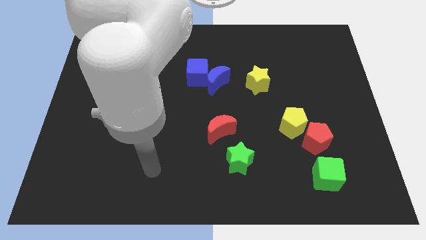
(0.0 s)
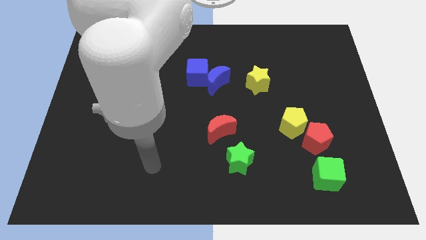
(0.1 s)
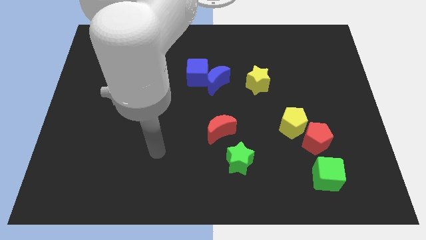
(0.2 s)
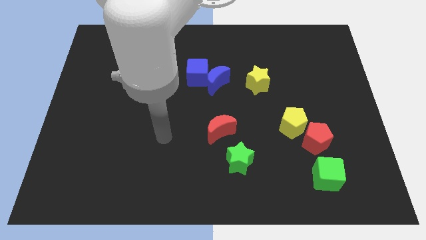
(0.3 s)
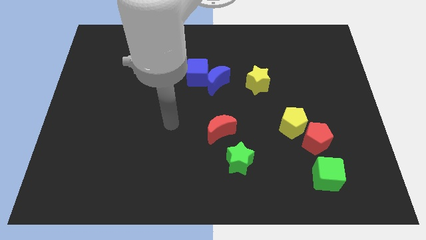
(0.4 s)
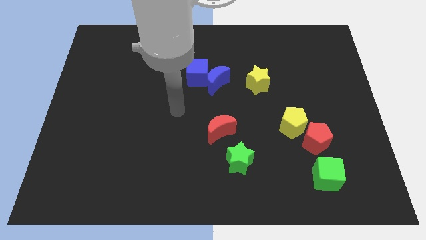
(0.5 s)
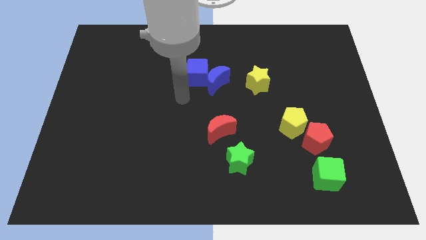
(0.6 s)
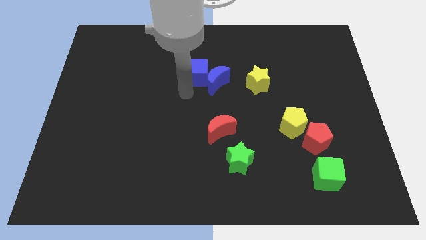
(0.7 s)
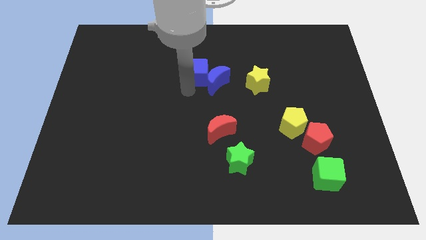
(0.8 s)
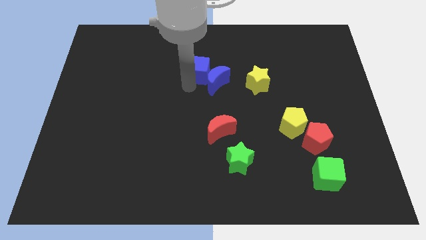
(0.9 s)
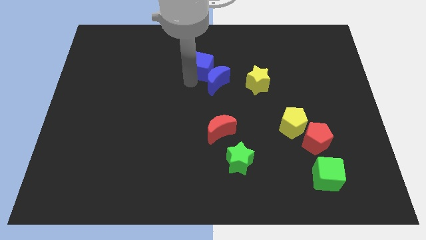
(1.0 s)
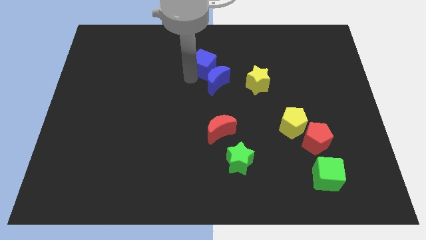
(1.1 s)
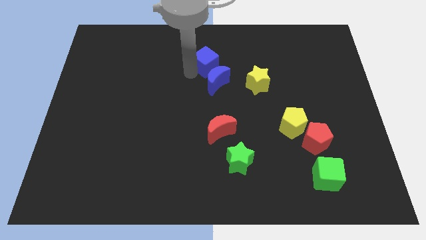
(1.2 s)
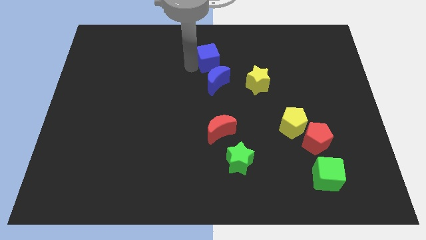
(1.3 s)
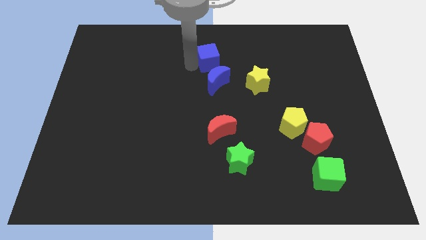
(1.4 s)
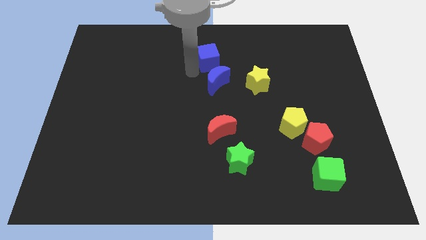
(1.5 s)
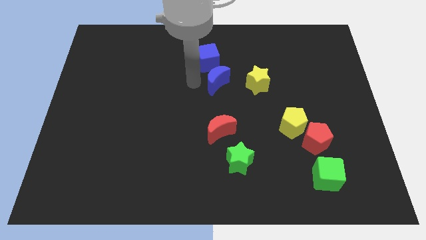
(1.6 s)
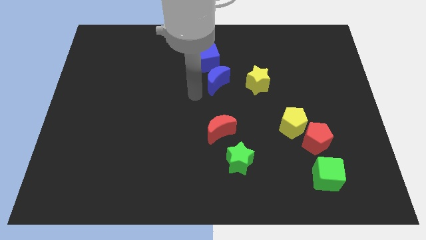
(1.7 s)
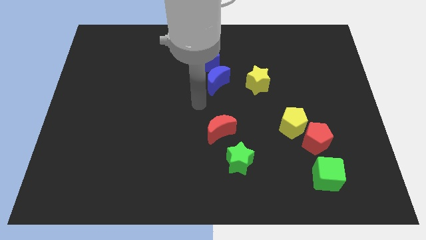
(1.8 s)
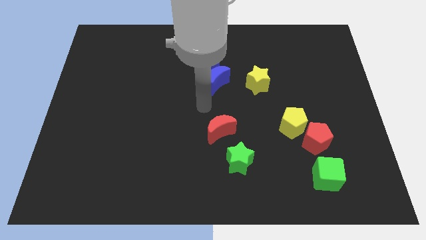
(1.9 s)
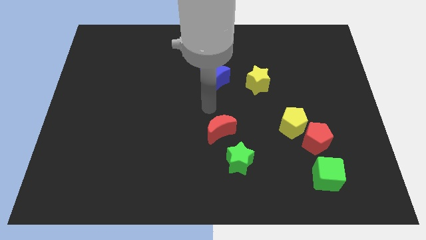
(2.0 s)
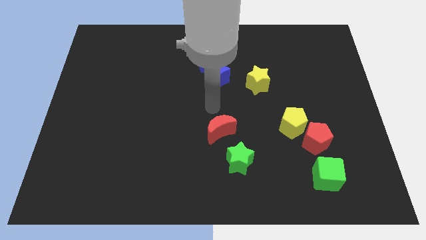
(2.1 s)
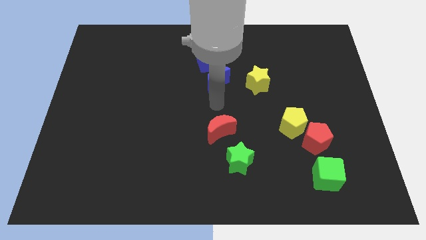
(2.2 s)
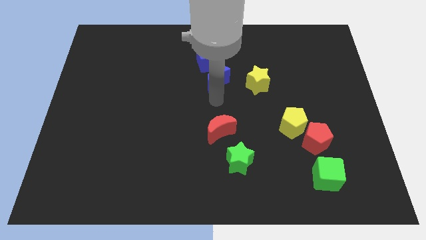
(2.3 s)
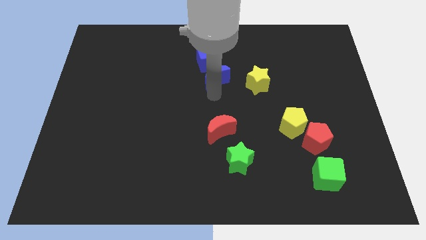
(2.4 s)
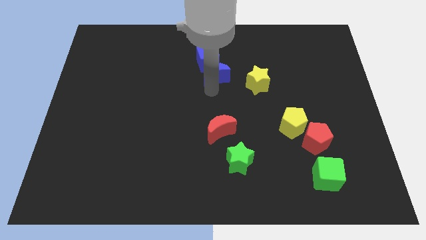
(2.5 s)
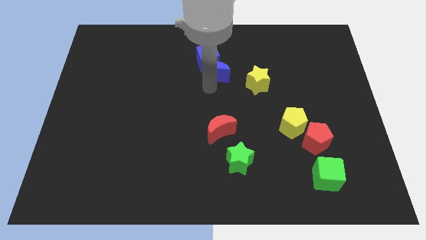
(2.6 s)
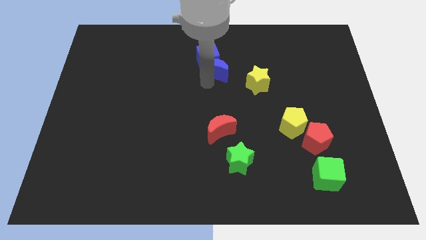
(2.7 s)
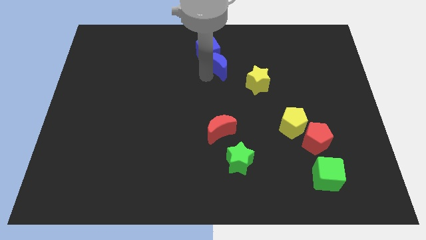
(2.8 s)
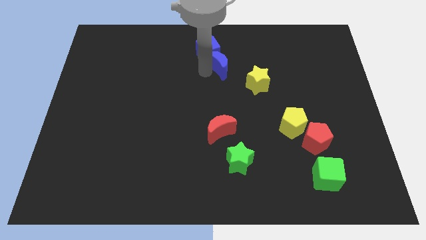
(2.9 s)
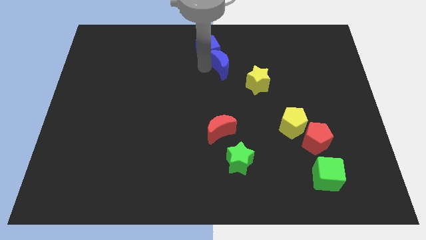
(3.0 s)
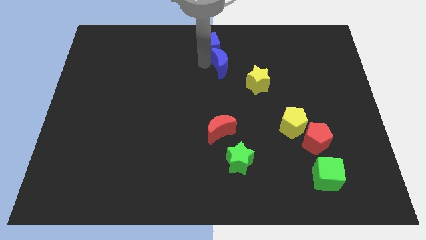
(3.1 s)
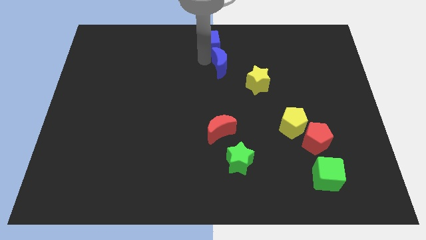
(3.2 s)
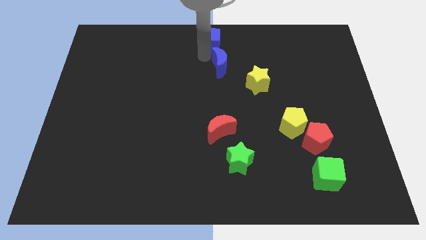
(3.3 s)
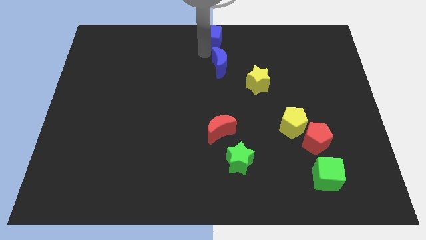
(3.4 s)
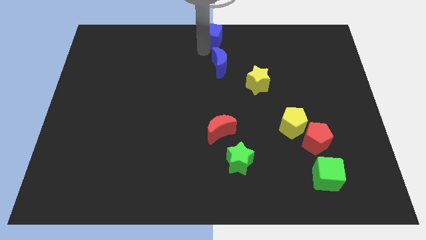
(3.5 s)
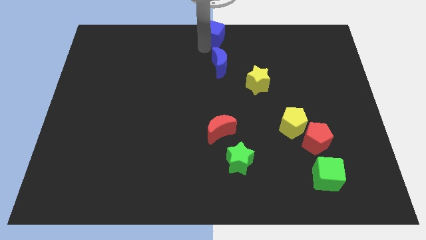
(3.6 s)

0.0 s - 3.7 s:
move the blue cube top center of the board

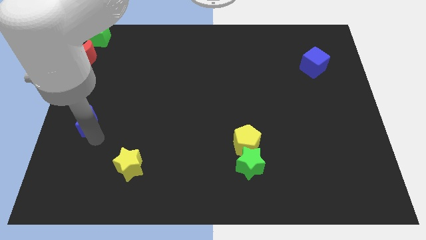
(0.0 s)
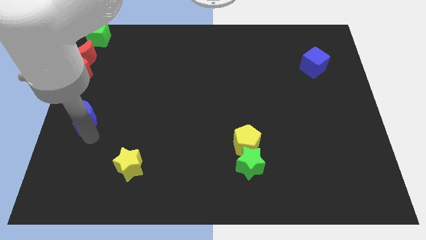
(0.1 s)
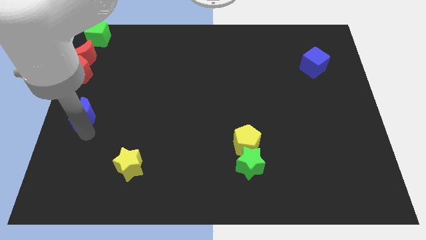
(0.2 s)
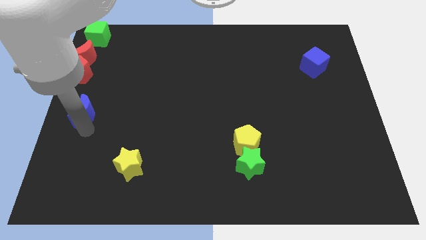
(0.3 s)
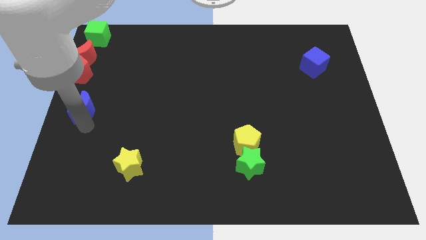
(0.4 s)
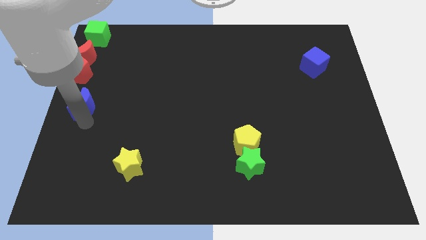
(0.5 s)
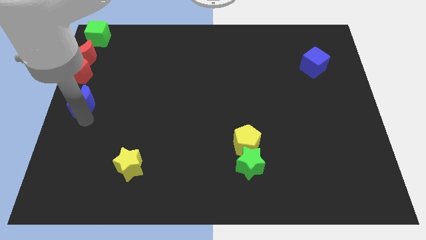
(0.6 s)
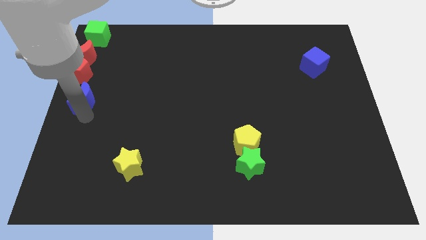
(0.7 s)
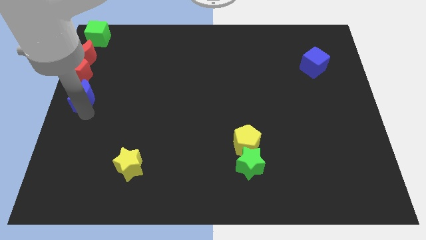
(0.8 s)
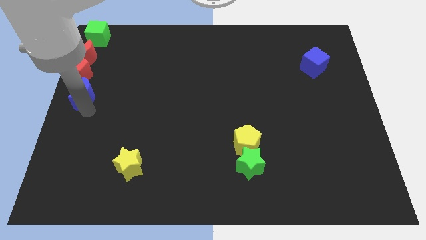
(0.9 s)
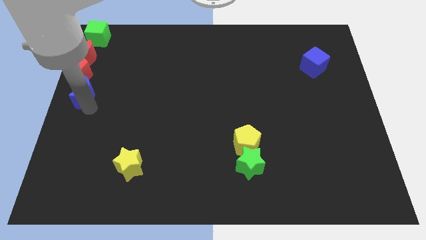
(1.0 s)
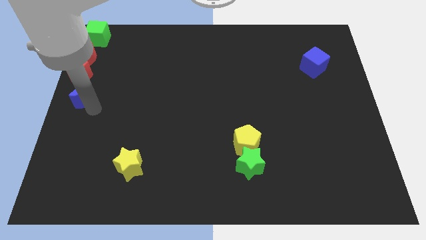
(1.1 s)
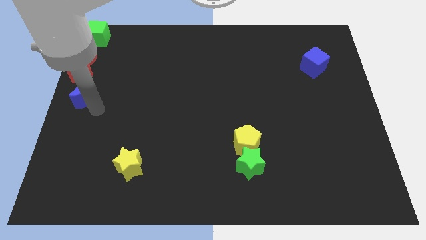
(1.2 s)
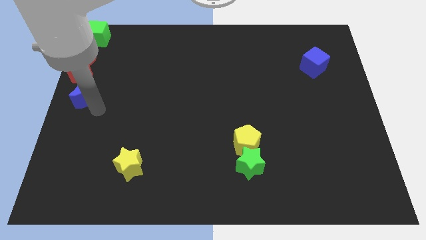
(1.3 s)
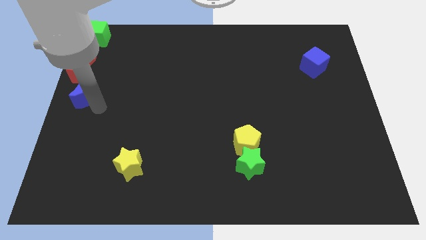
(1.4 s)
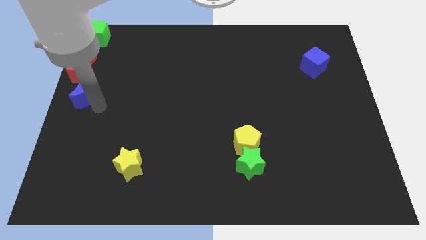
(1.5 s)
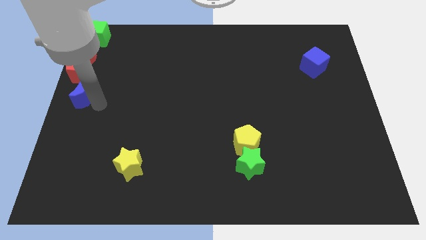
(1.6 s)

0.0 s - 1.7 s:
place the blue crescent below the red pentagon

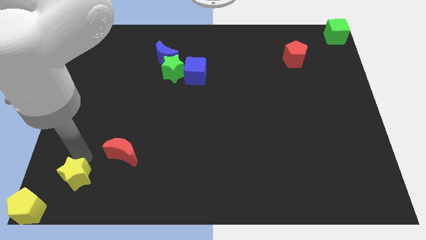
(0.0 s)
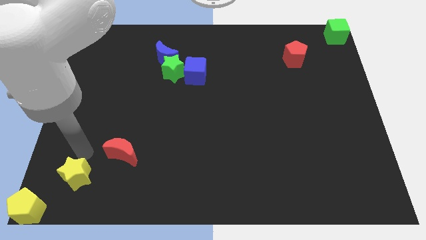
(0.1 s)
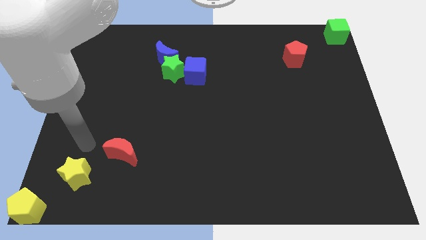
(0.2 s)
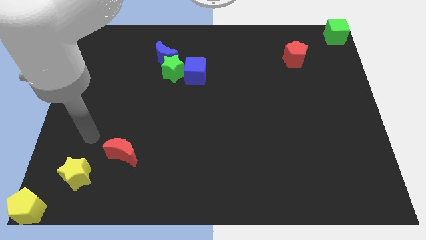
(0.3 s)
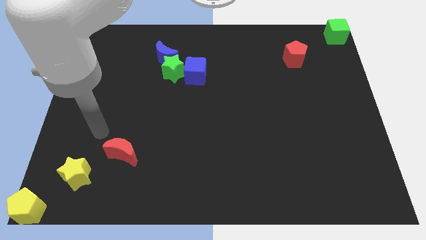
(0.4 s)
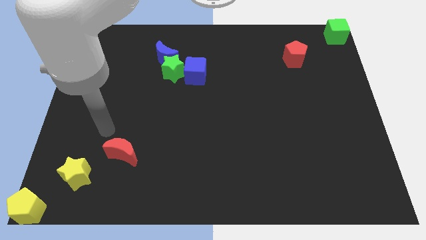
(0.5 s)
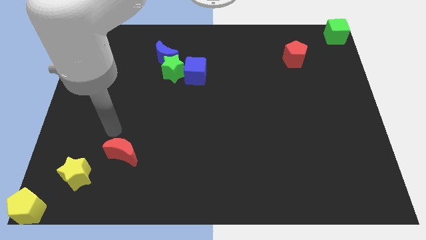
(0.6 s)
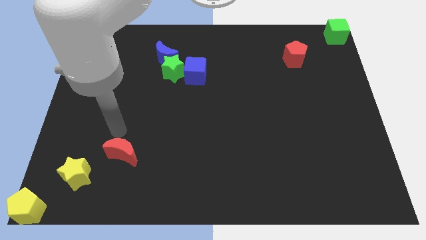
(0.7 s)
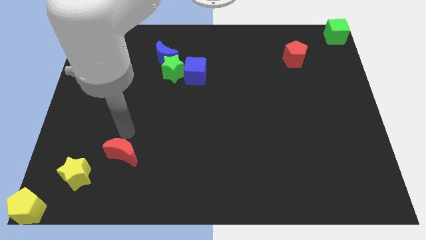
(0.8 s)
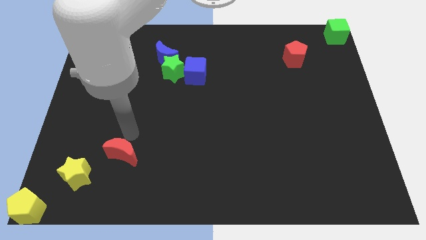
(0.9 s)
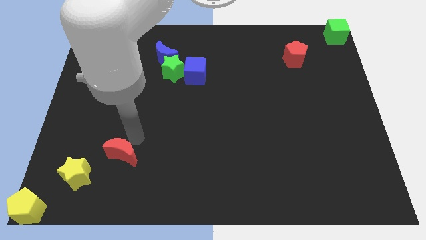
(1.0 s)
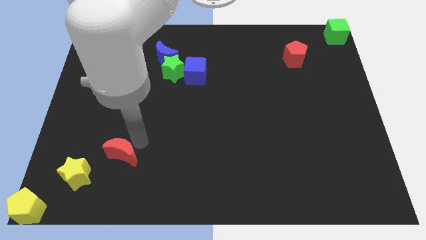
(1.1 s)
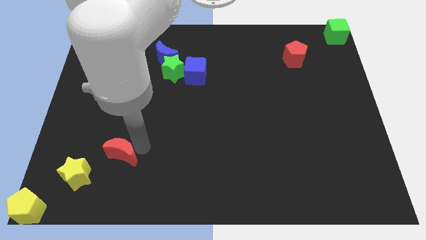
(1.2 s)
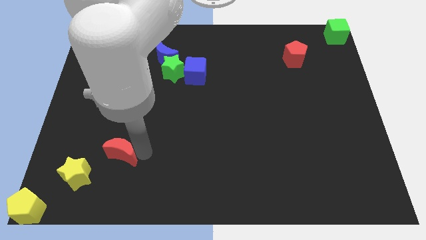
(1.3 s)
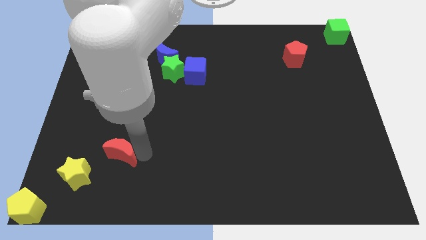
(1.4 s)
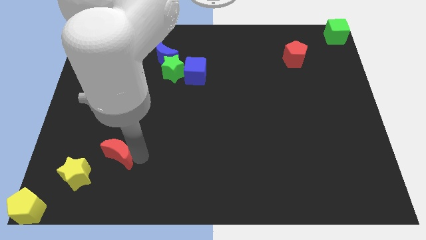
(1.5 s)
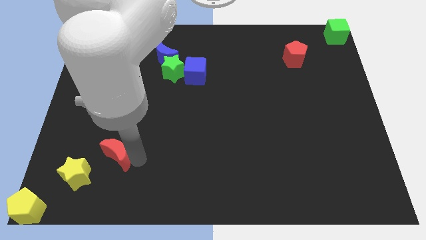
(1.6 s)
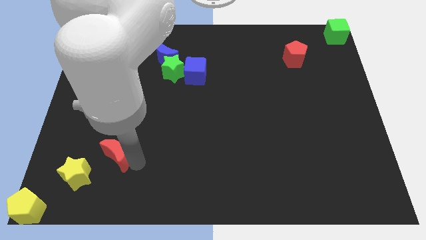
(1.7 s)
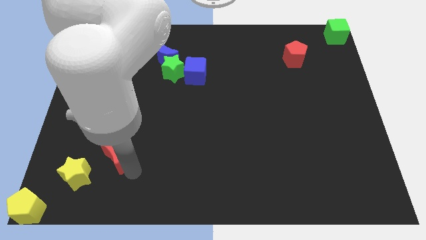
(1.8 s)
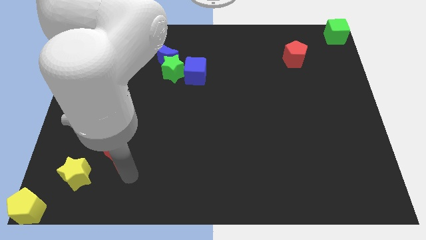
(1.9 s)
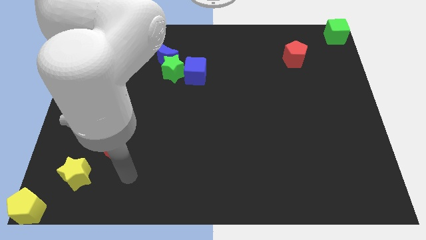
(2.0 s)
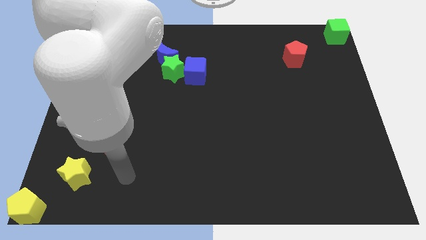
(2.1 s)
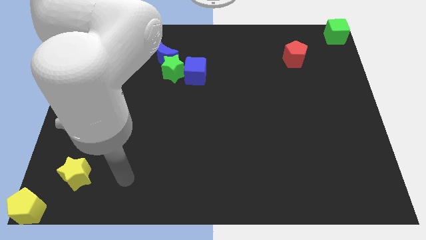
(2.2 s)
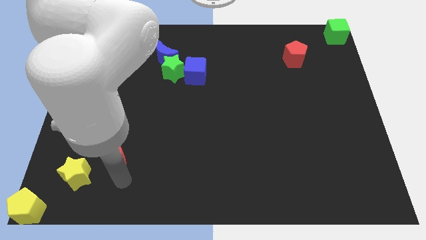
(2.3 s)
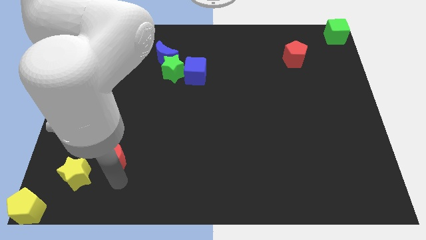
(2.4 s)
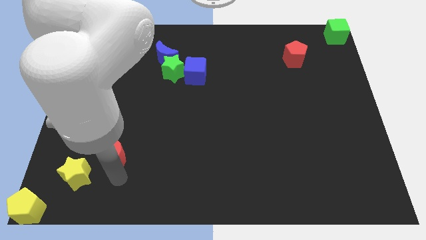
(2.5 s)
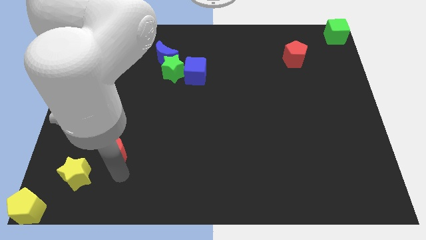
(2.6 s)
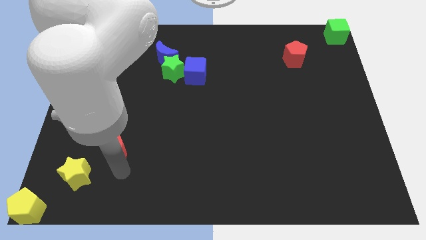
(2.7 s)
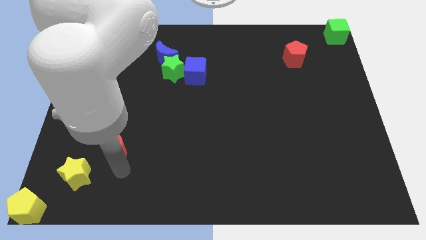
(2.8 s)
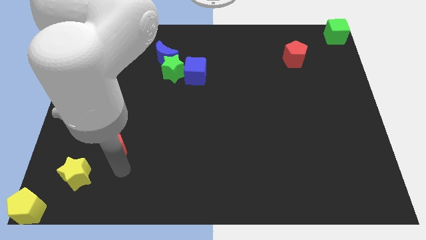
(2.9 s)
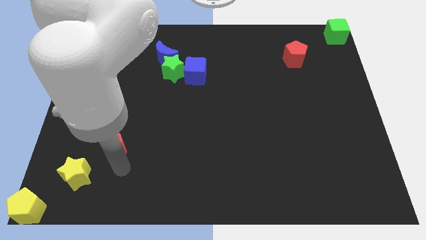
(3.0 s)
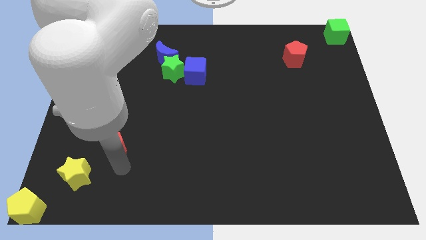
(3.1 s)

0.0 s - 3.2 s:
move the red crescent diagonally on the top right side of the yellow star

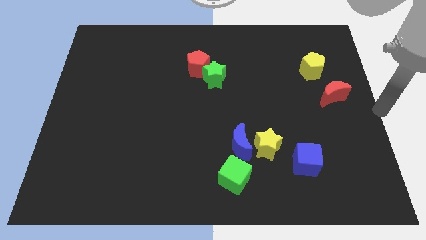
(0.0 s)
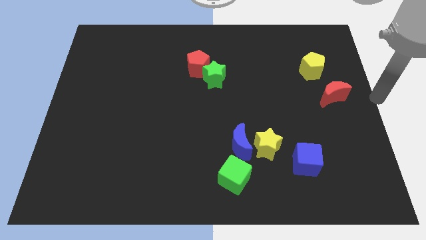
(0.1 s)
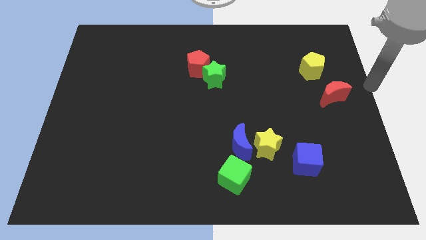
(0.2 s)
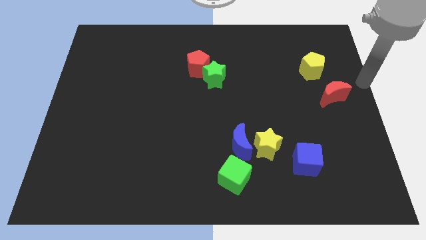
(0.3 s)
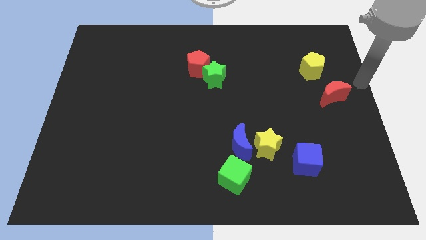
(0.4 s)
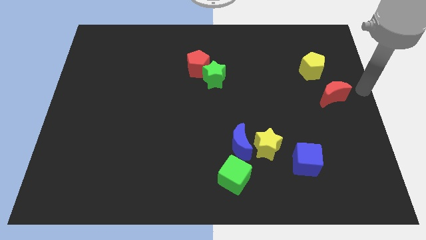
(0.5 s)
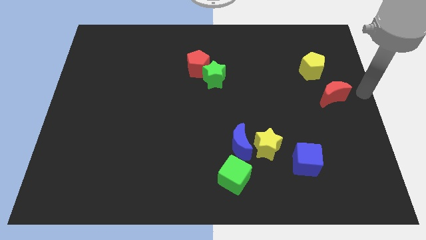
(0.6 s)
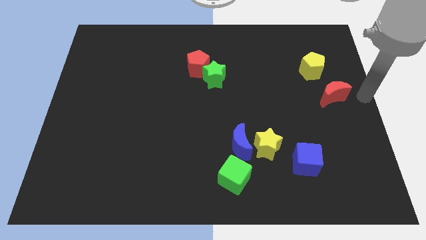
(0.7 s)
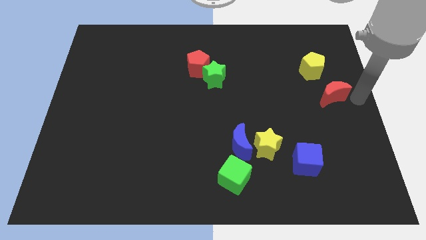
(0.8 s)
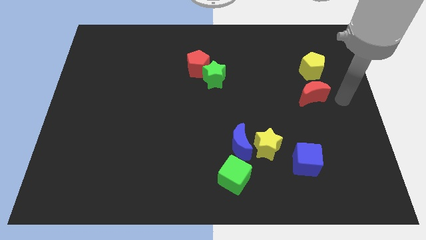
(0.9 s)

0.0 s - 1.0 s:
move your arm near the red moon
